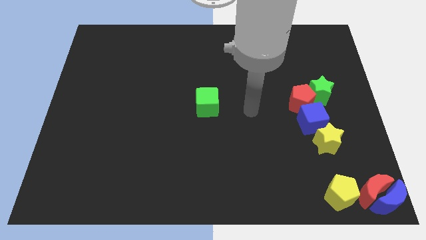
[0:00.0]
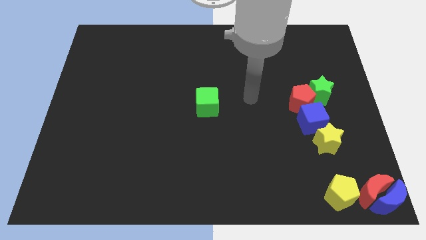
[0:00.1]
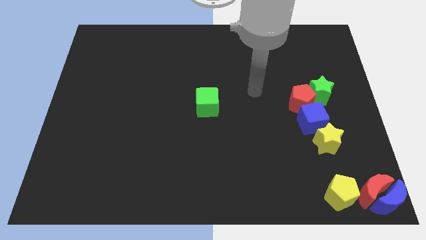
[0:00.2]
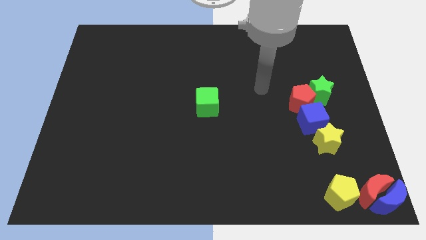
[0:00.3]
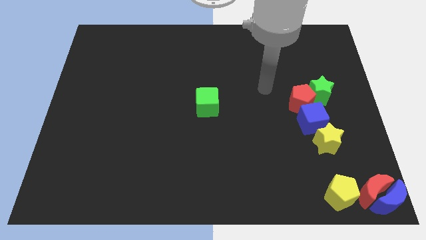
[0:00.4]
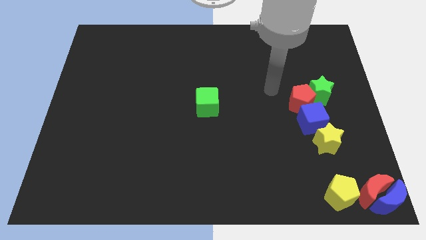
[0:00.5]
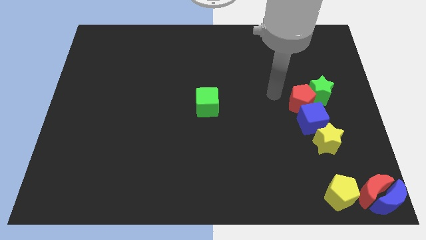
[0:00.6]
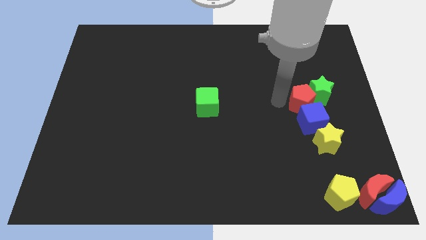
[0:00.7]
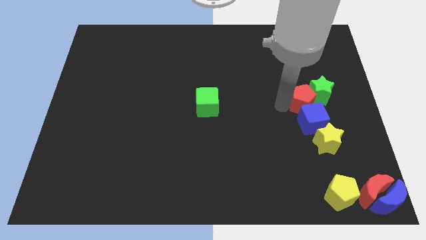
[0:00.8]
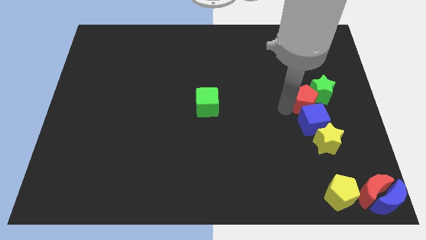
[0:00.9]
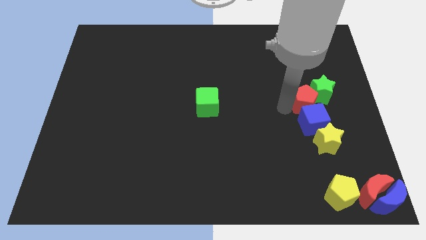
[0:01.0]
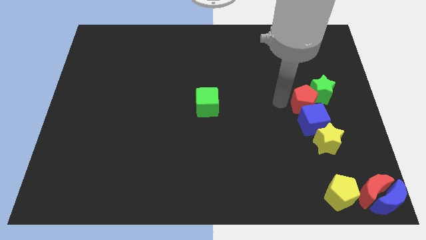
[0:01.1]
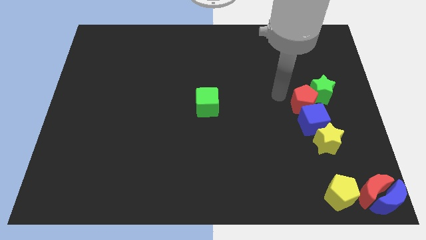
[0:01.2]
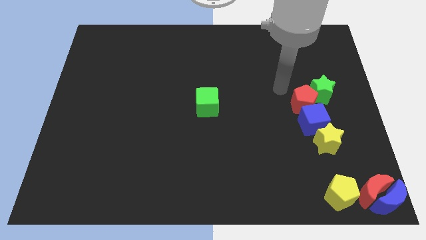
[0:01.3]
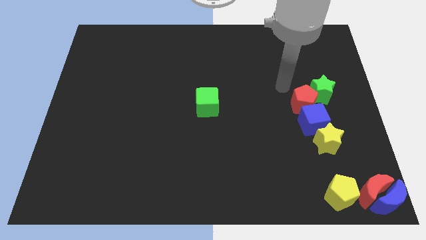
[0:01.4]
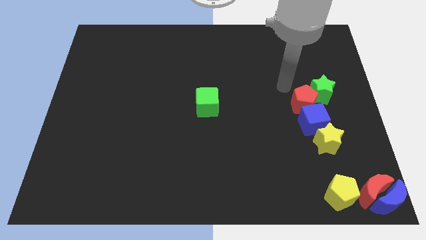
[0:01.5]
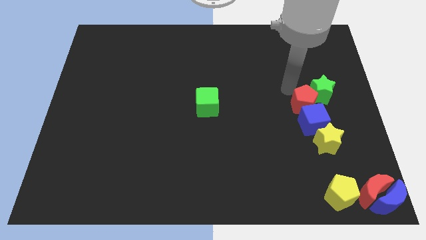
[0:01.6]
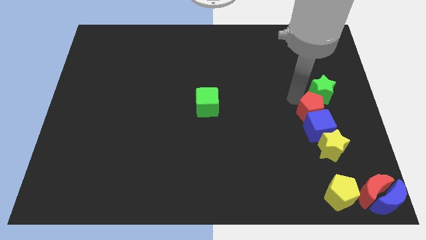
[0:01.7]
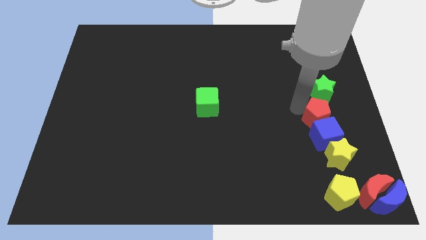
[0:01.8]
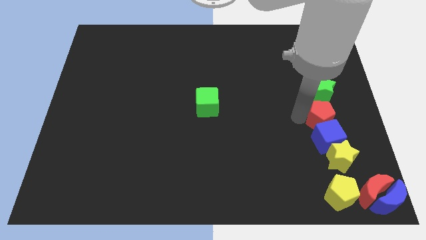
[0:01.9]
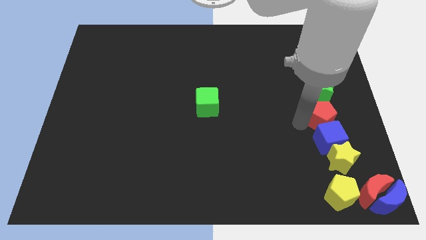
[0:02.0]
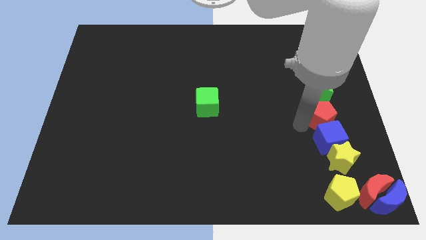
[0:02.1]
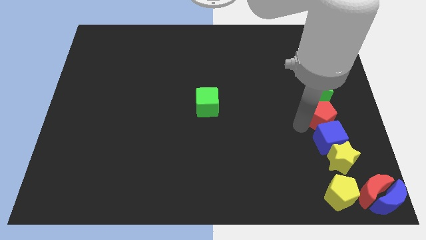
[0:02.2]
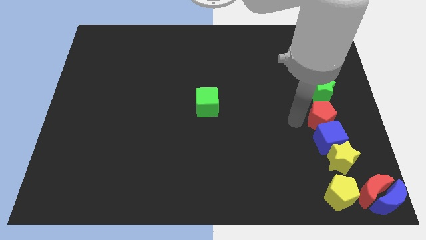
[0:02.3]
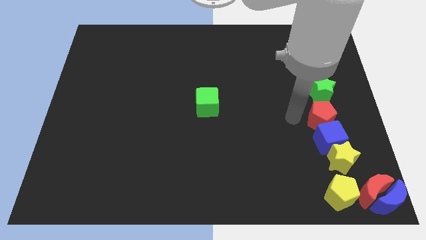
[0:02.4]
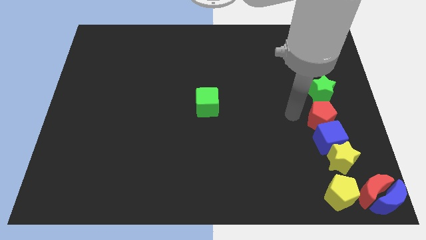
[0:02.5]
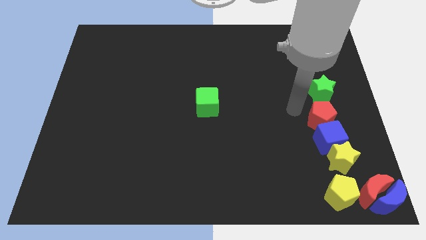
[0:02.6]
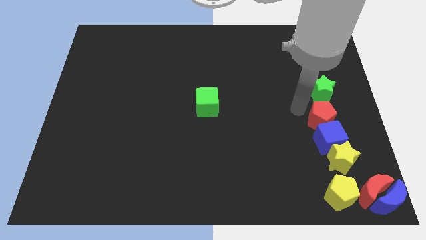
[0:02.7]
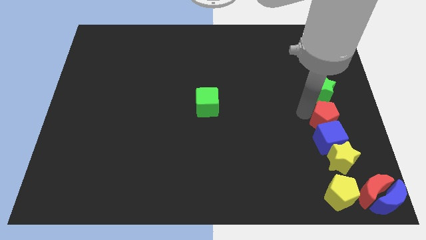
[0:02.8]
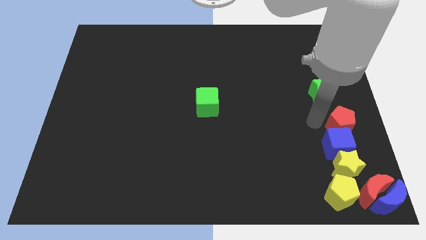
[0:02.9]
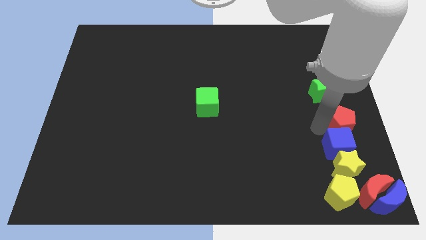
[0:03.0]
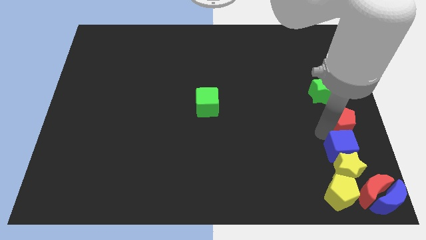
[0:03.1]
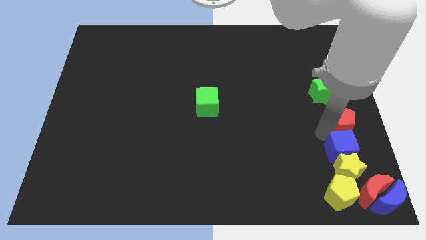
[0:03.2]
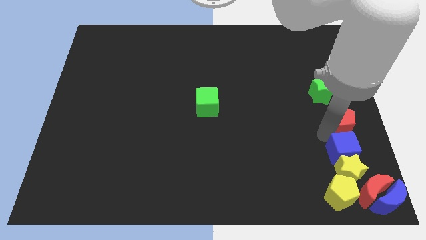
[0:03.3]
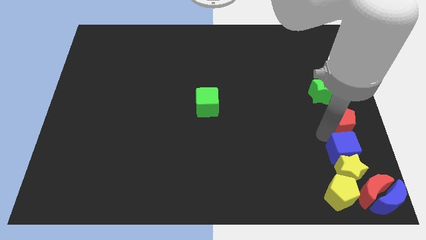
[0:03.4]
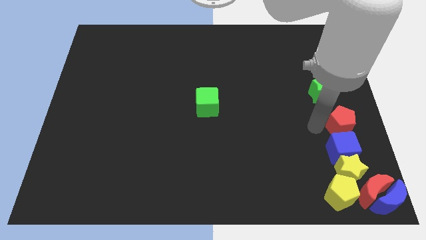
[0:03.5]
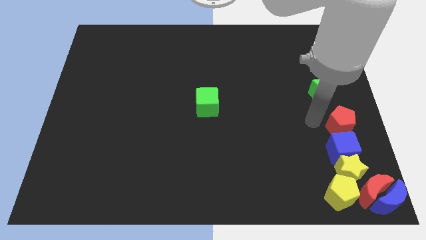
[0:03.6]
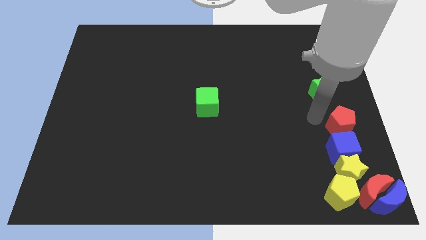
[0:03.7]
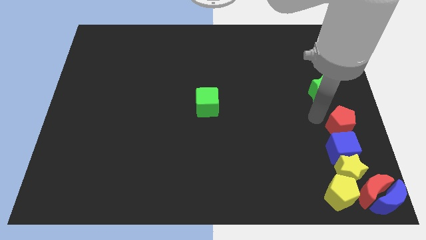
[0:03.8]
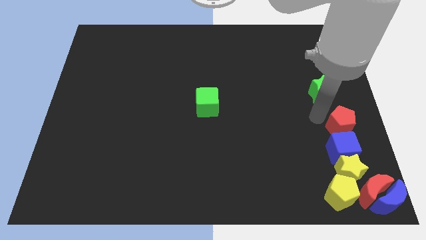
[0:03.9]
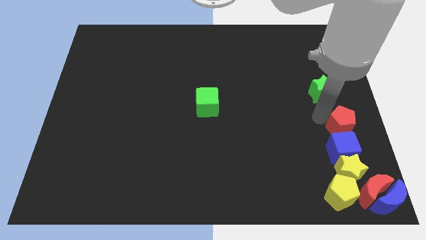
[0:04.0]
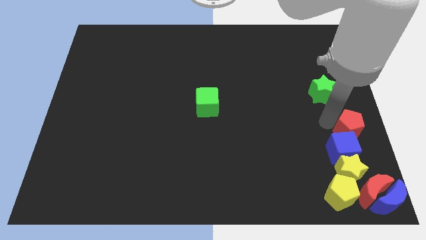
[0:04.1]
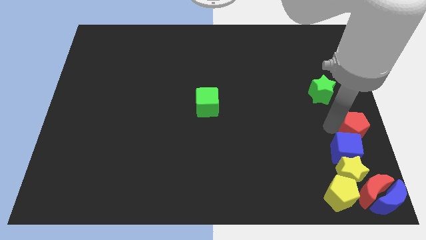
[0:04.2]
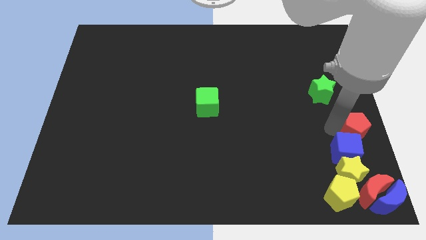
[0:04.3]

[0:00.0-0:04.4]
push the yellow starblue cubered pentagon towards the bottom right of the board

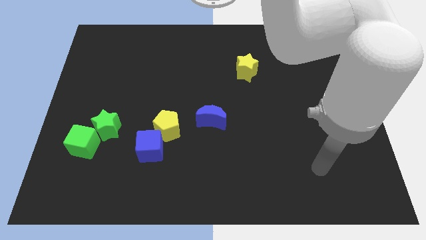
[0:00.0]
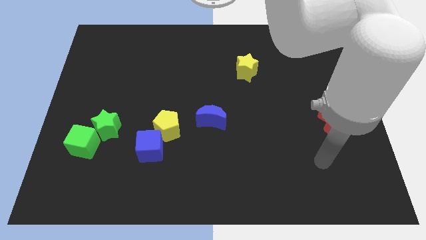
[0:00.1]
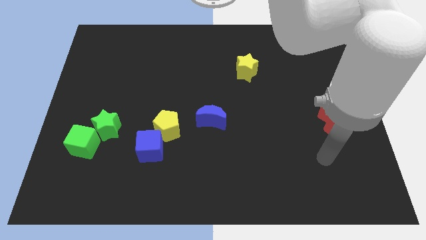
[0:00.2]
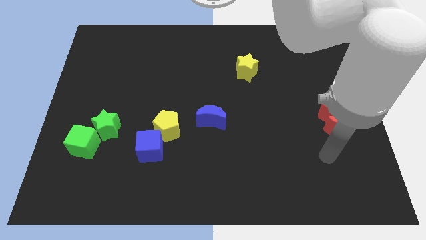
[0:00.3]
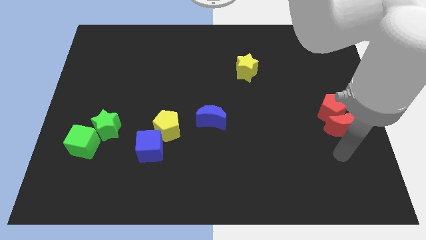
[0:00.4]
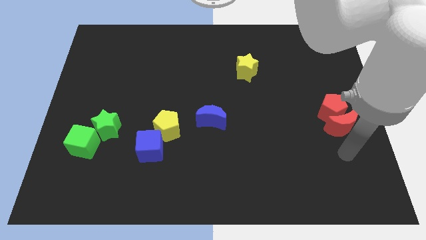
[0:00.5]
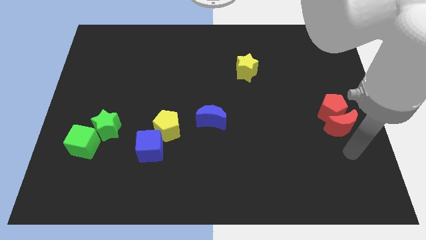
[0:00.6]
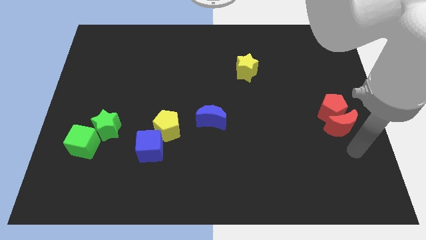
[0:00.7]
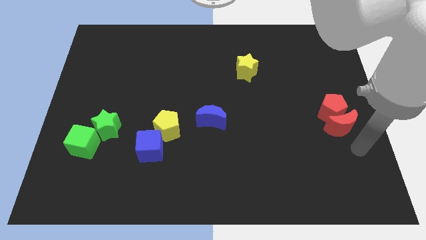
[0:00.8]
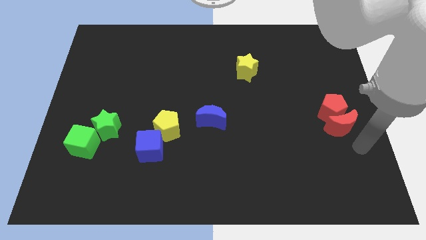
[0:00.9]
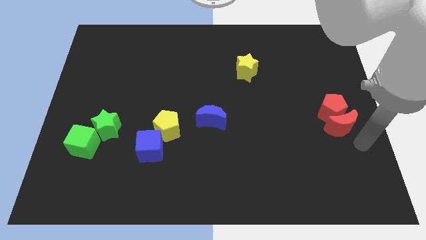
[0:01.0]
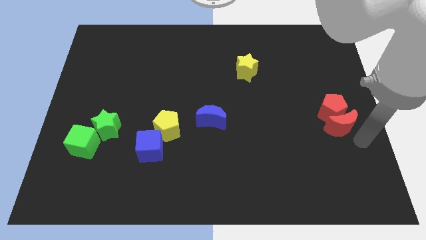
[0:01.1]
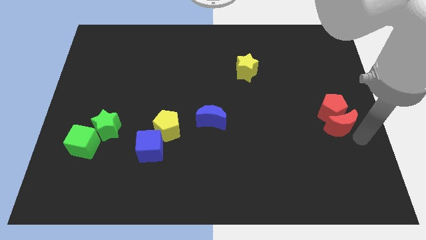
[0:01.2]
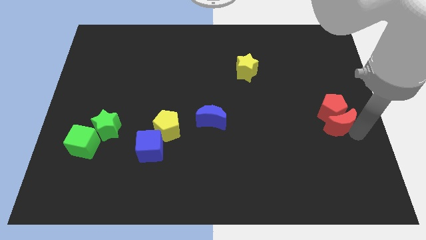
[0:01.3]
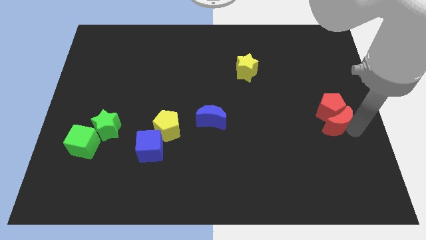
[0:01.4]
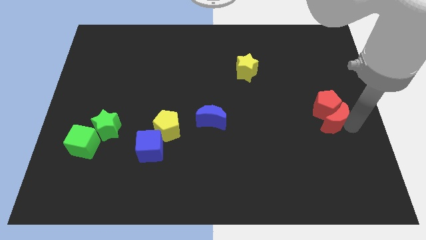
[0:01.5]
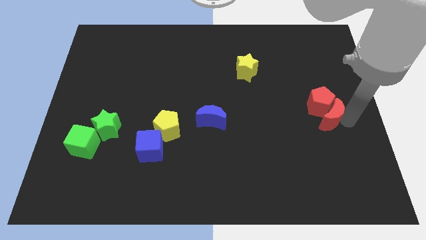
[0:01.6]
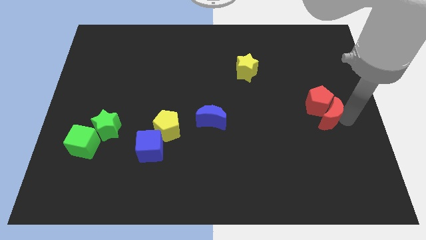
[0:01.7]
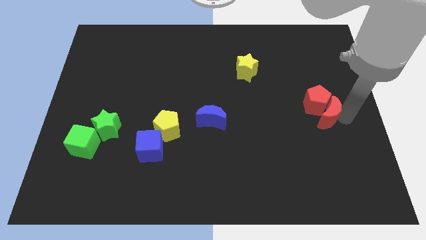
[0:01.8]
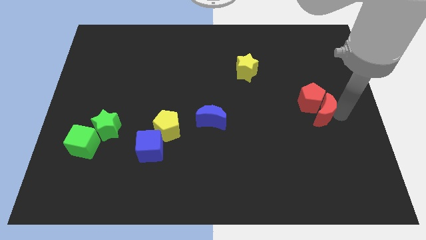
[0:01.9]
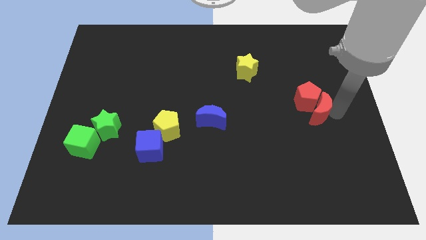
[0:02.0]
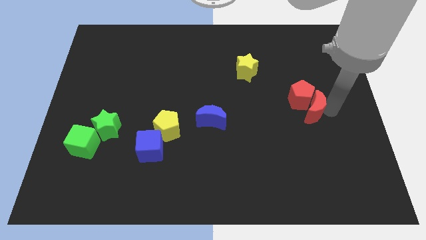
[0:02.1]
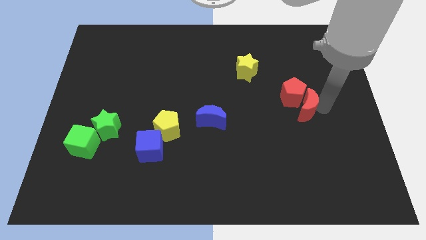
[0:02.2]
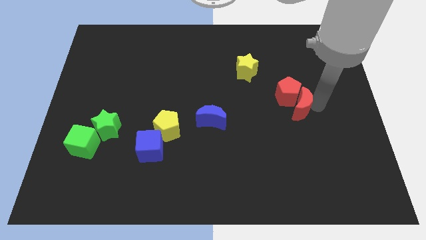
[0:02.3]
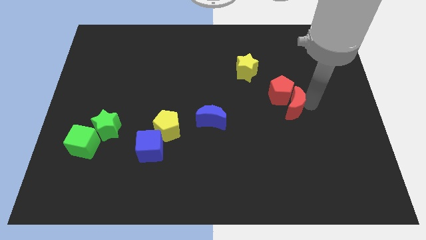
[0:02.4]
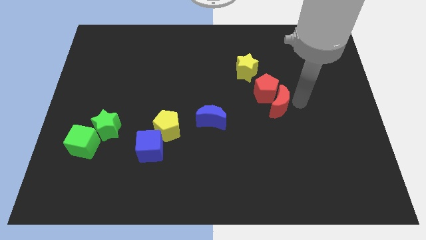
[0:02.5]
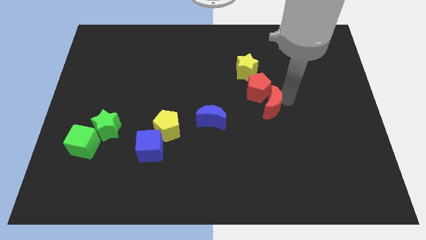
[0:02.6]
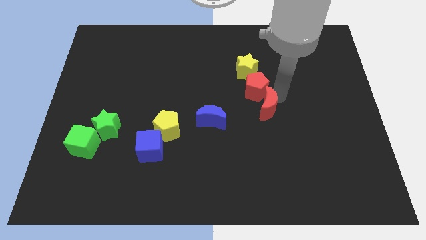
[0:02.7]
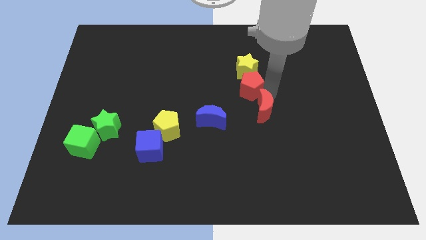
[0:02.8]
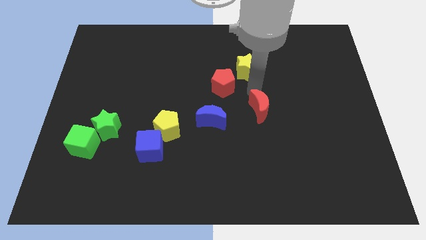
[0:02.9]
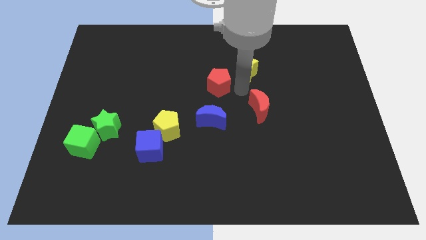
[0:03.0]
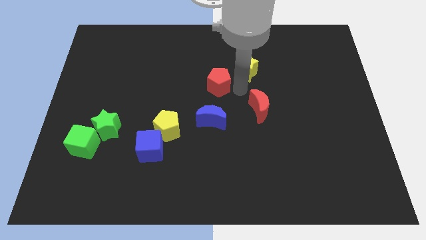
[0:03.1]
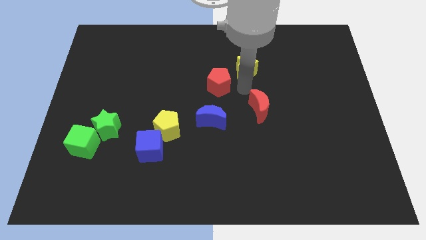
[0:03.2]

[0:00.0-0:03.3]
place the red pentagon above the blue moon

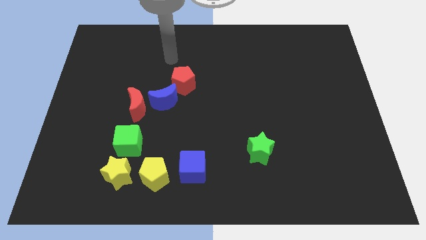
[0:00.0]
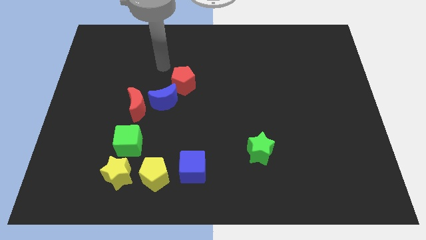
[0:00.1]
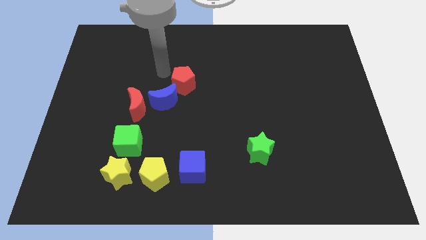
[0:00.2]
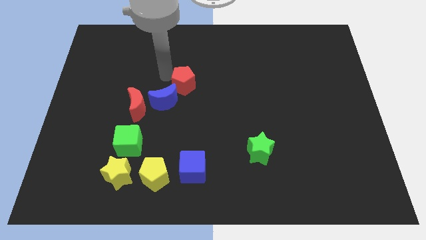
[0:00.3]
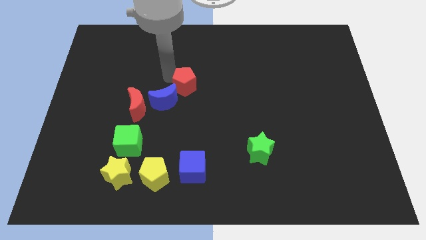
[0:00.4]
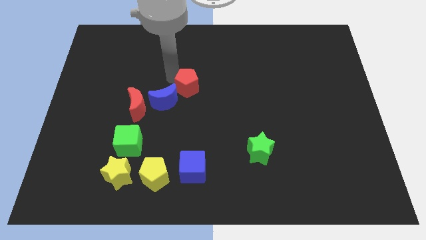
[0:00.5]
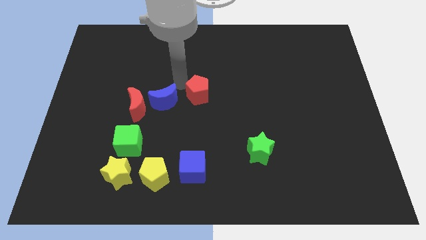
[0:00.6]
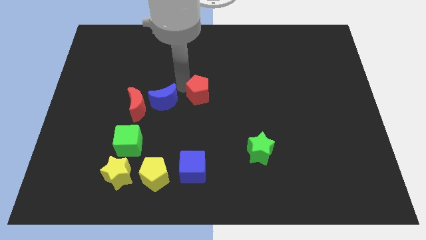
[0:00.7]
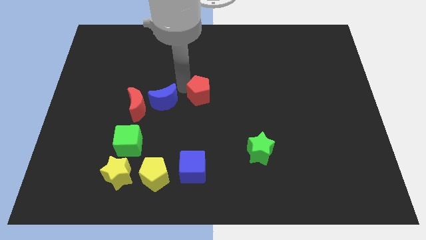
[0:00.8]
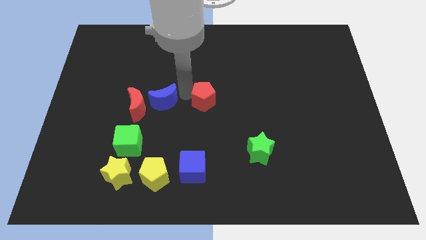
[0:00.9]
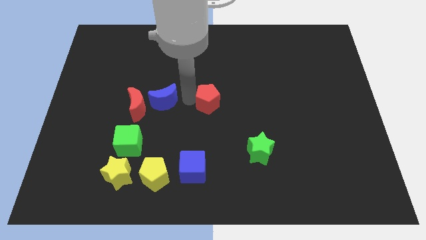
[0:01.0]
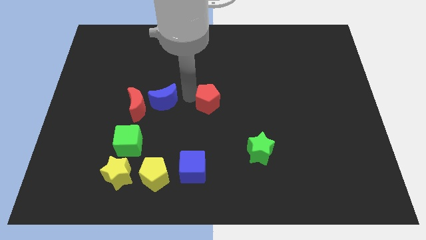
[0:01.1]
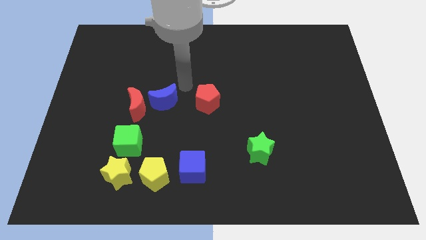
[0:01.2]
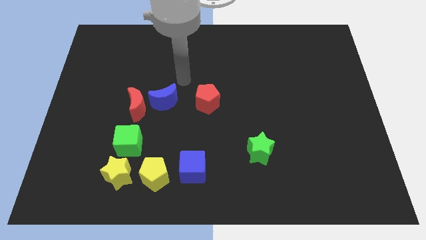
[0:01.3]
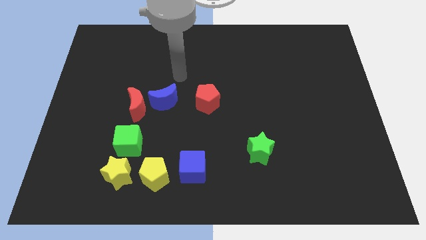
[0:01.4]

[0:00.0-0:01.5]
separate the red pentagon from the blue moon
